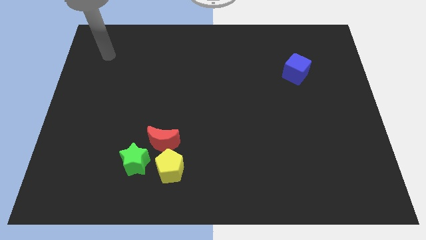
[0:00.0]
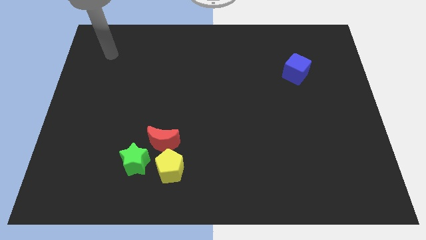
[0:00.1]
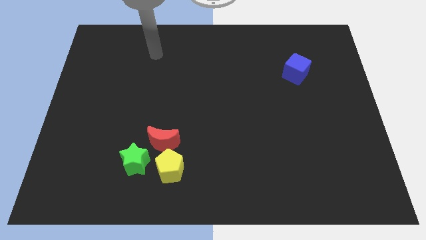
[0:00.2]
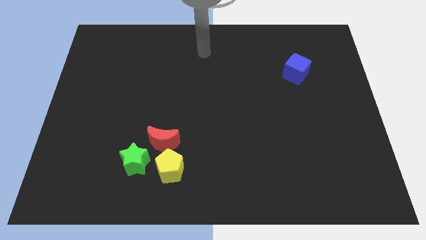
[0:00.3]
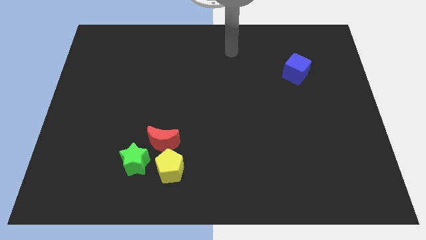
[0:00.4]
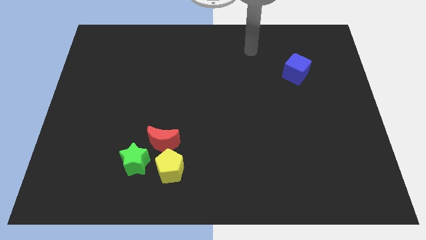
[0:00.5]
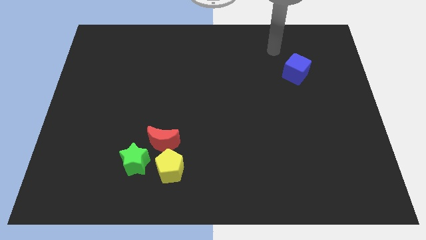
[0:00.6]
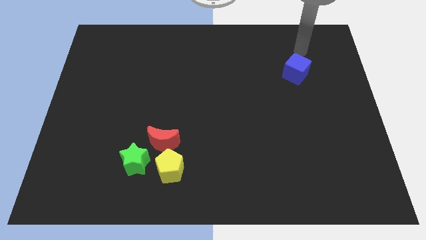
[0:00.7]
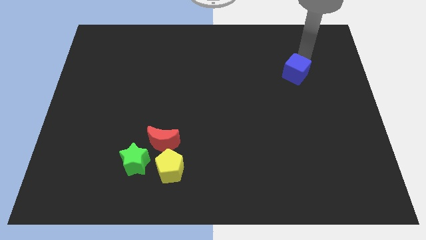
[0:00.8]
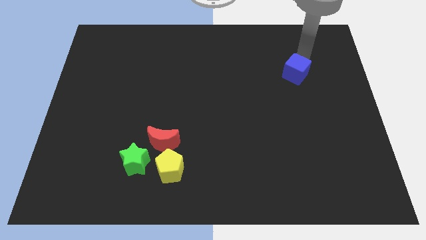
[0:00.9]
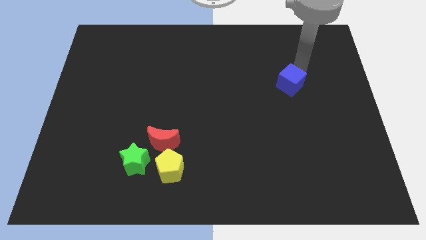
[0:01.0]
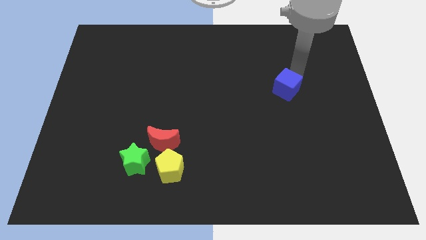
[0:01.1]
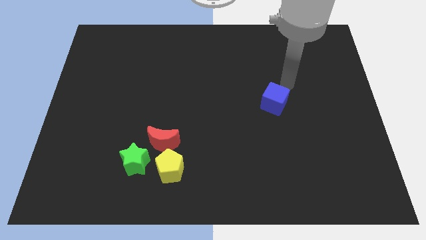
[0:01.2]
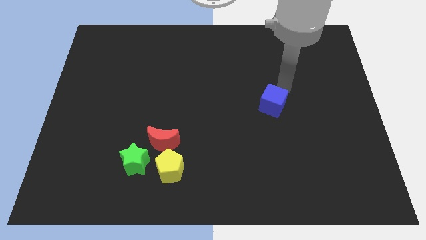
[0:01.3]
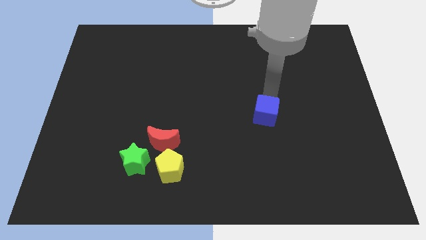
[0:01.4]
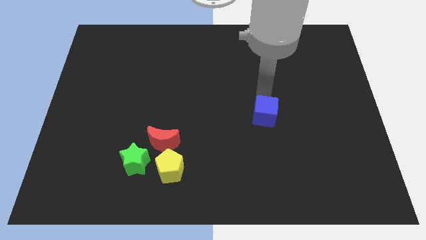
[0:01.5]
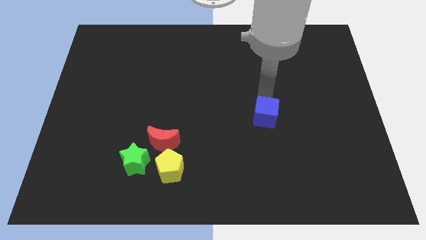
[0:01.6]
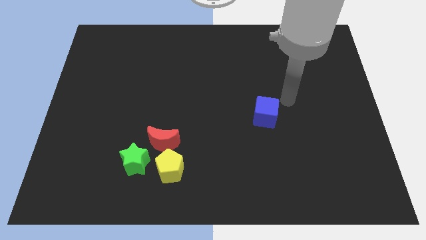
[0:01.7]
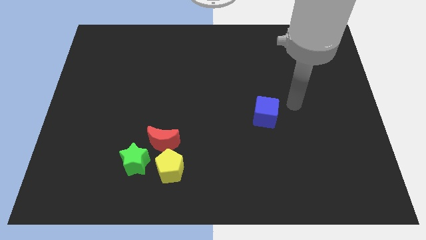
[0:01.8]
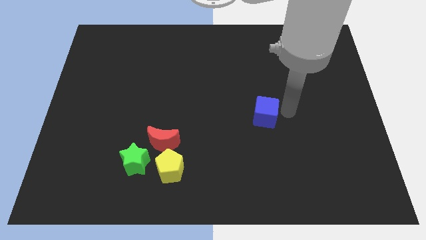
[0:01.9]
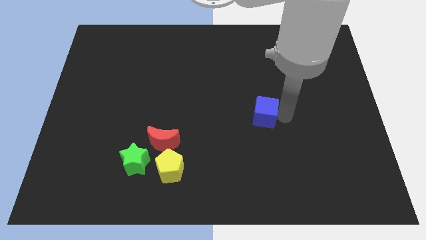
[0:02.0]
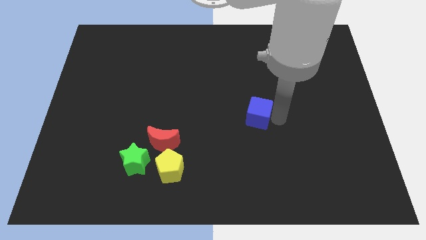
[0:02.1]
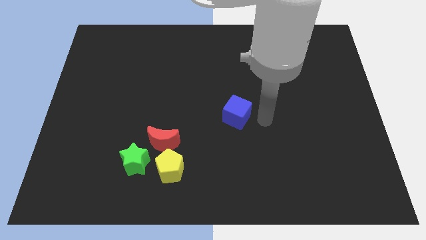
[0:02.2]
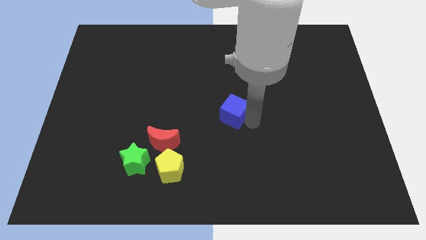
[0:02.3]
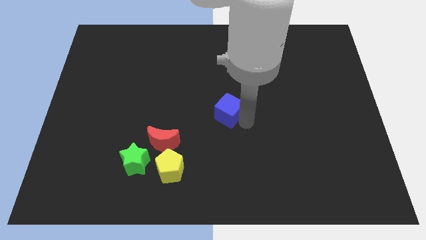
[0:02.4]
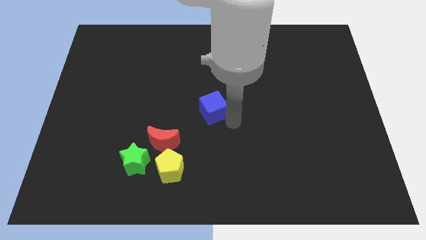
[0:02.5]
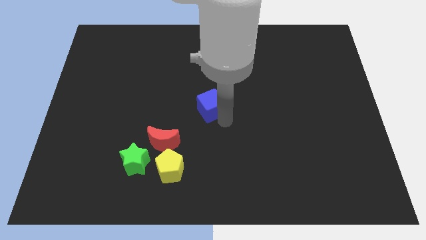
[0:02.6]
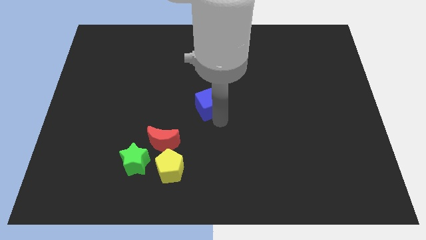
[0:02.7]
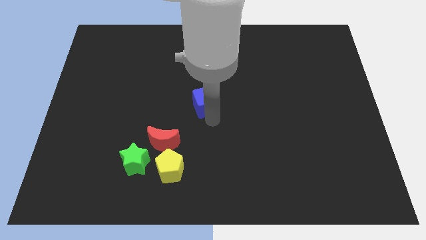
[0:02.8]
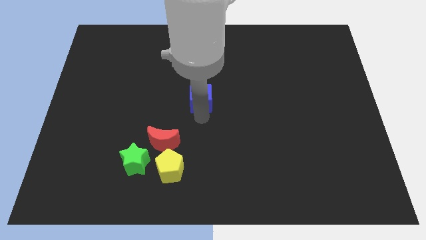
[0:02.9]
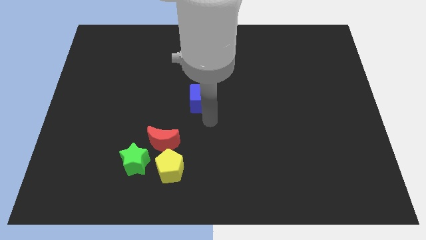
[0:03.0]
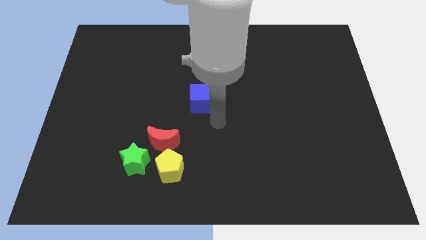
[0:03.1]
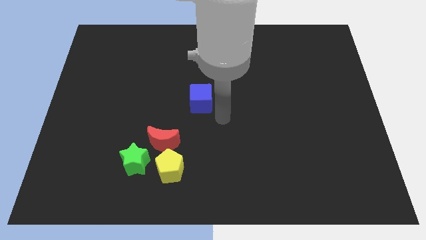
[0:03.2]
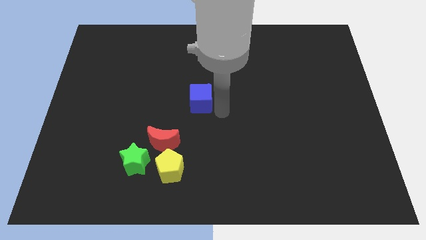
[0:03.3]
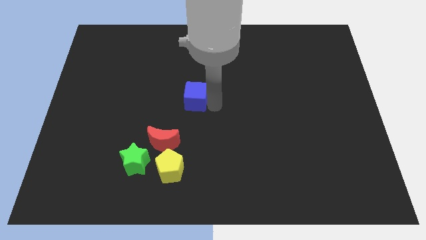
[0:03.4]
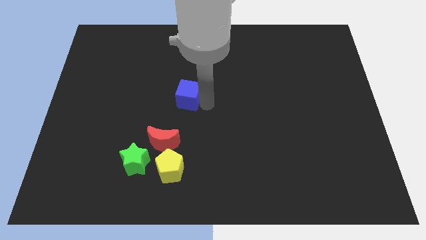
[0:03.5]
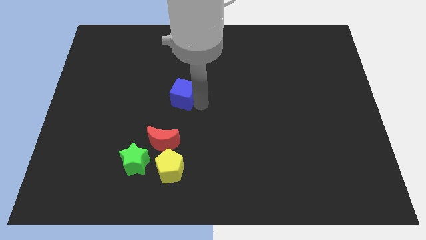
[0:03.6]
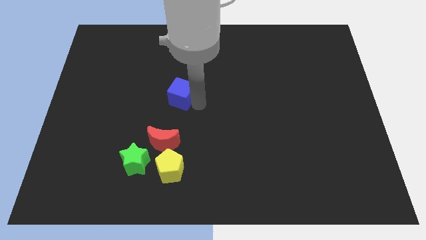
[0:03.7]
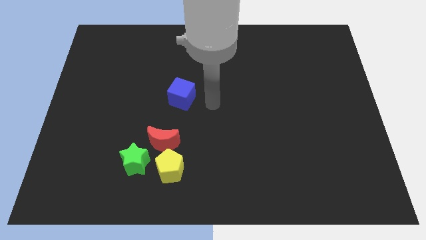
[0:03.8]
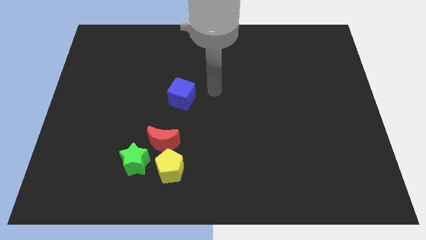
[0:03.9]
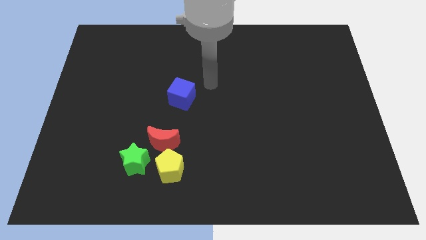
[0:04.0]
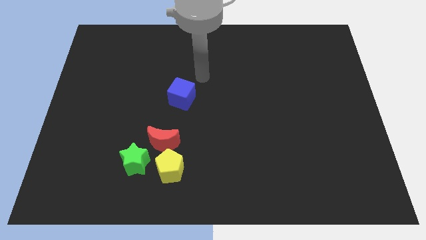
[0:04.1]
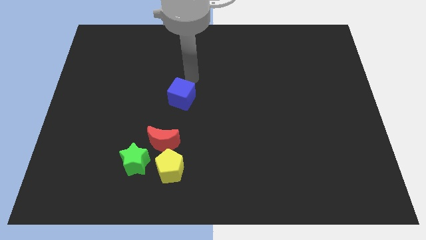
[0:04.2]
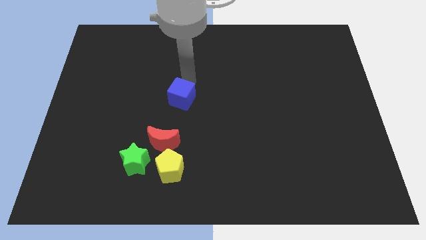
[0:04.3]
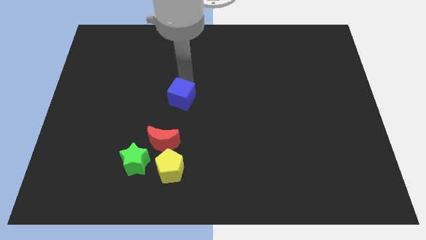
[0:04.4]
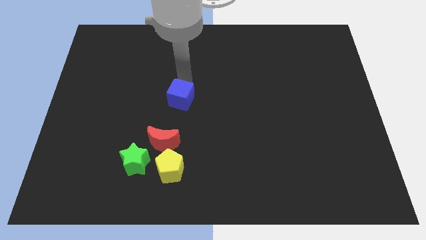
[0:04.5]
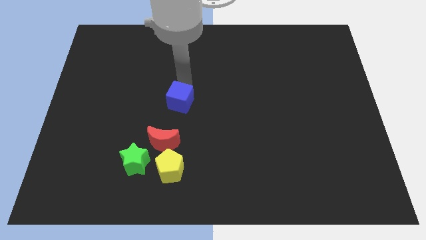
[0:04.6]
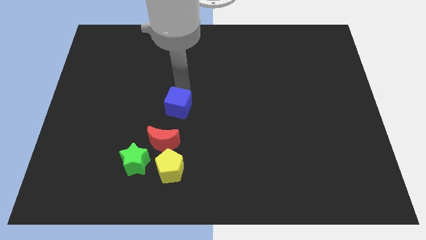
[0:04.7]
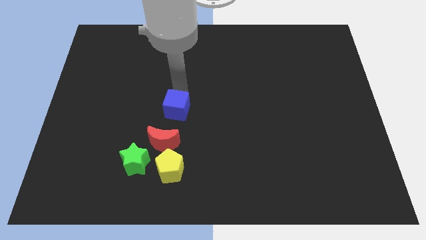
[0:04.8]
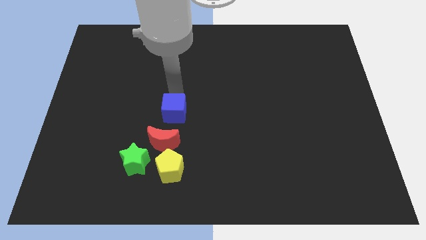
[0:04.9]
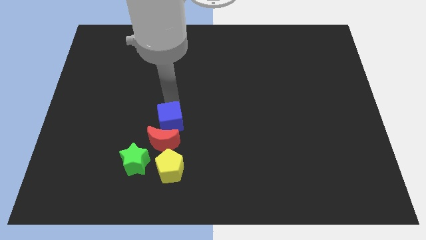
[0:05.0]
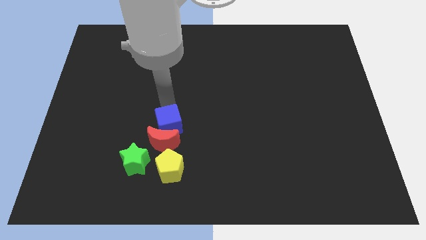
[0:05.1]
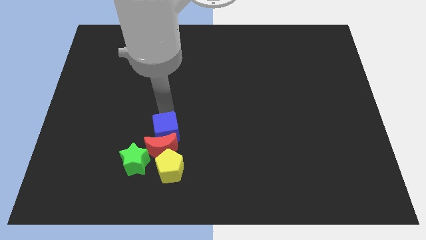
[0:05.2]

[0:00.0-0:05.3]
push the blue cube close to the red block

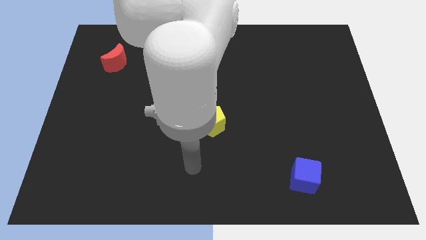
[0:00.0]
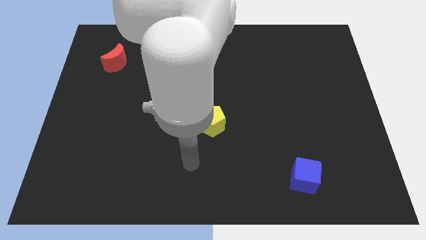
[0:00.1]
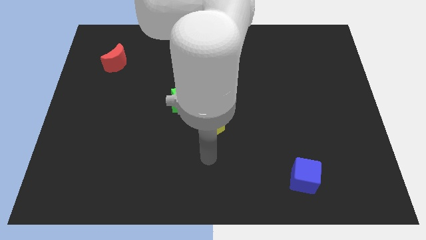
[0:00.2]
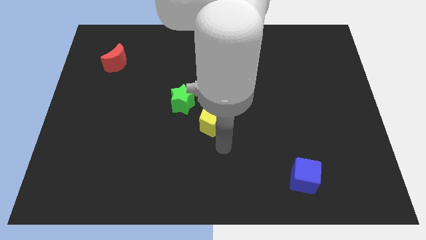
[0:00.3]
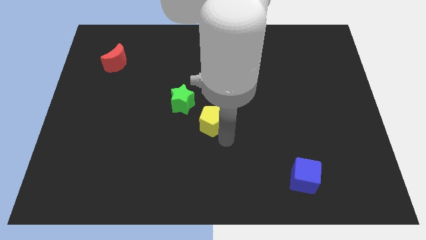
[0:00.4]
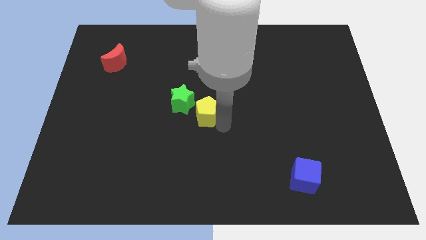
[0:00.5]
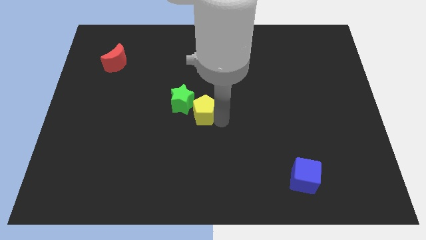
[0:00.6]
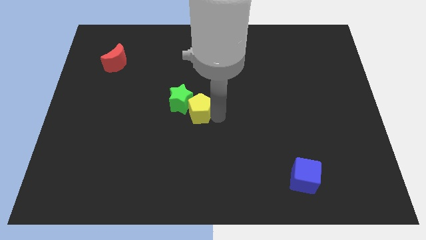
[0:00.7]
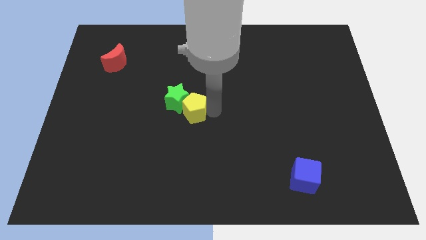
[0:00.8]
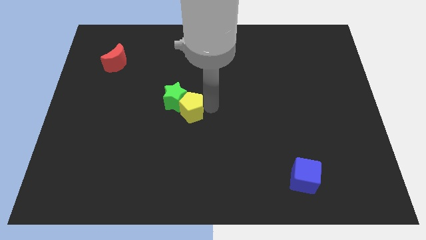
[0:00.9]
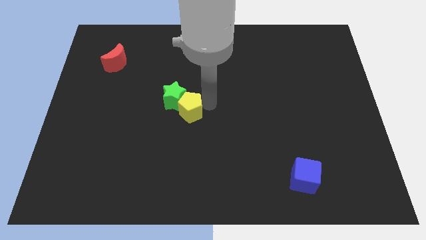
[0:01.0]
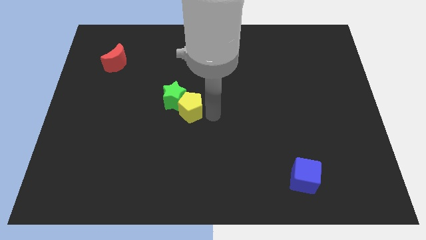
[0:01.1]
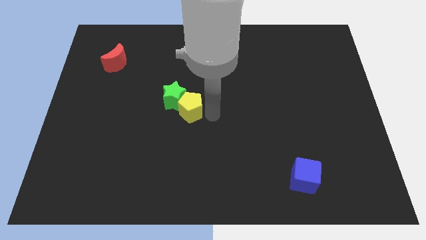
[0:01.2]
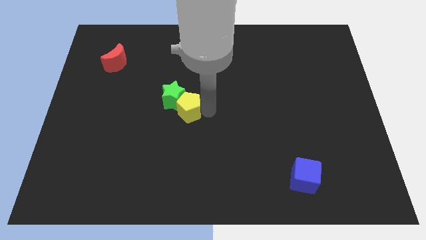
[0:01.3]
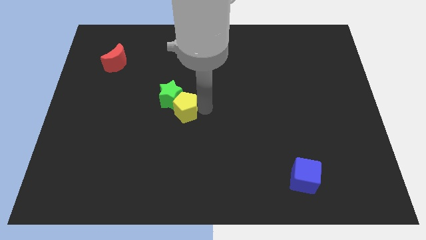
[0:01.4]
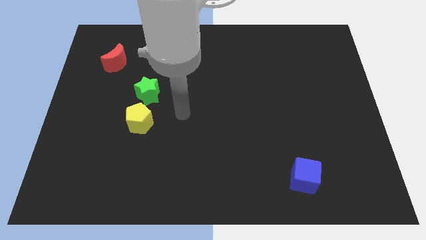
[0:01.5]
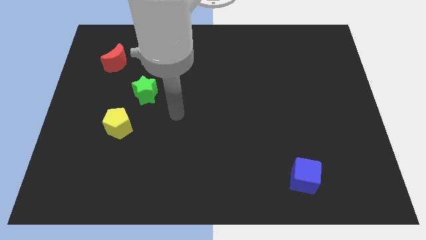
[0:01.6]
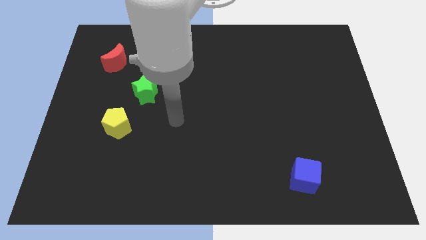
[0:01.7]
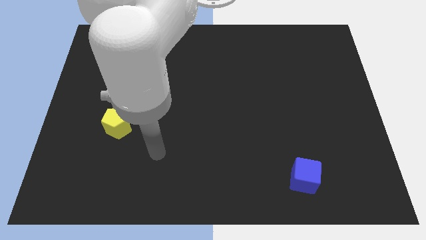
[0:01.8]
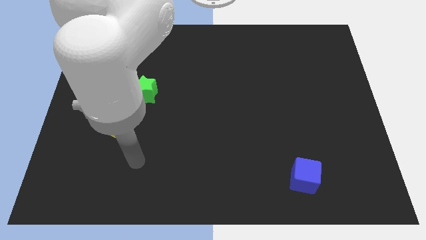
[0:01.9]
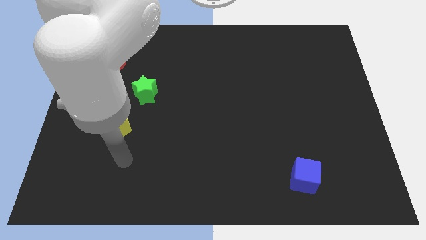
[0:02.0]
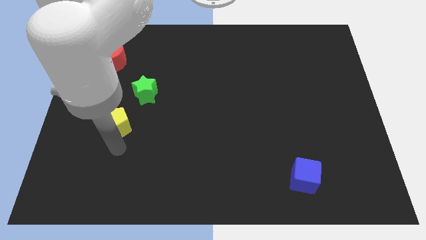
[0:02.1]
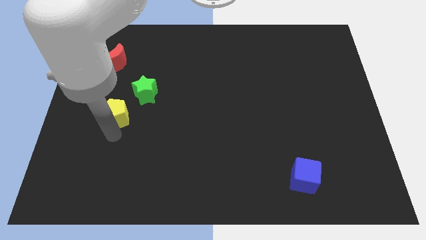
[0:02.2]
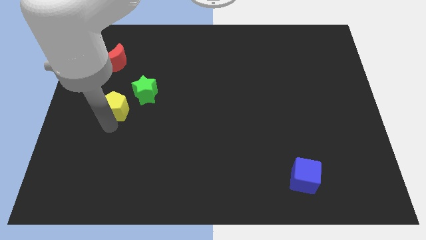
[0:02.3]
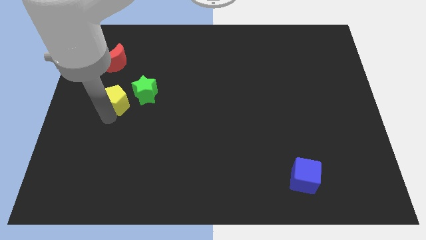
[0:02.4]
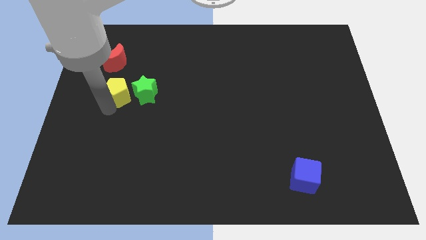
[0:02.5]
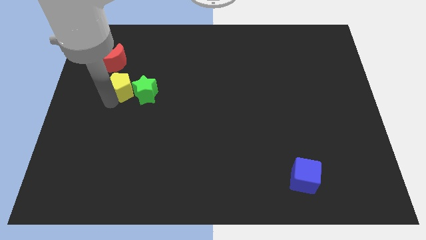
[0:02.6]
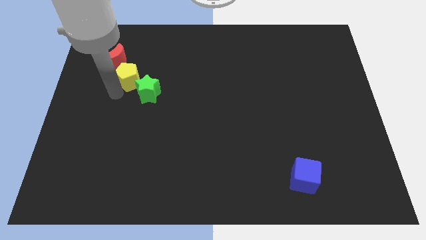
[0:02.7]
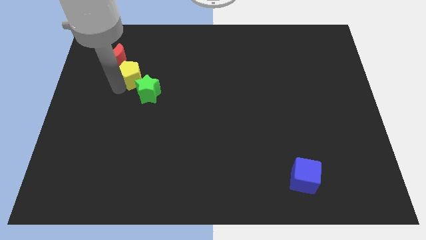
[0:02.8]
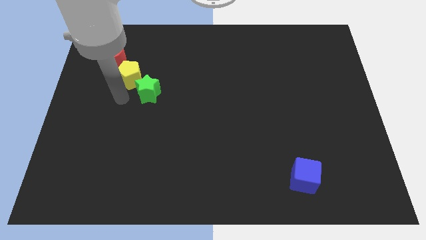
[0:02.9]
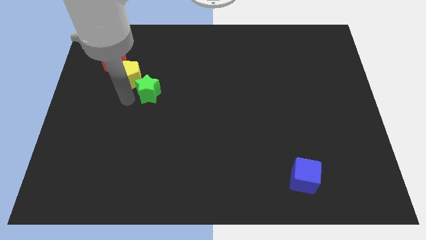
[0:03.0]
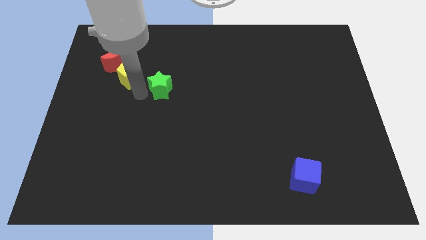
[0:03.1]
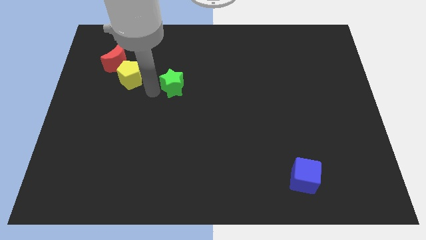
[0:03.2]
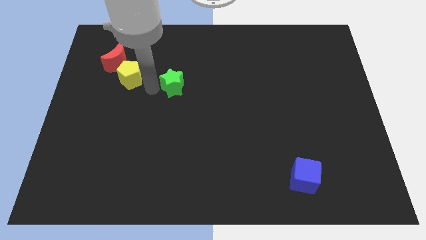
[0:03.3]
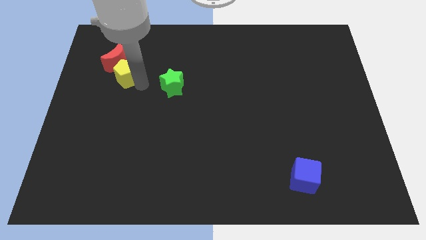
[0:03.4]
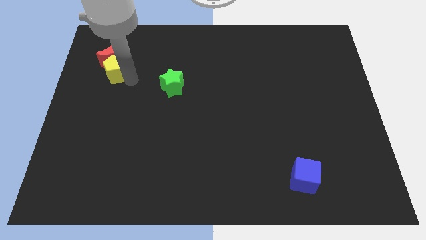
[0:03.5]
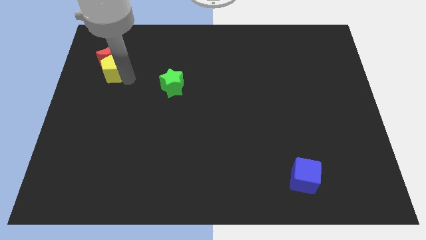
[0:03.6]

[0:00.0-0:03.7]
put the yellow pentagon next to the red moon
